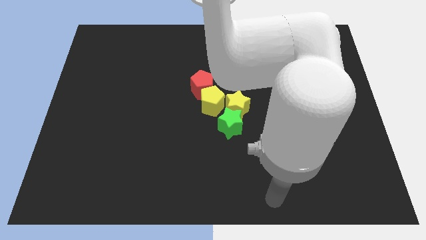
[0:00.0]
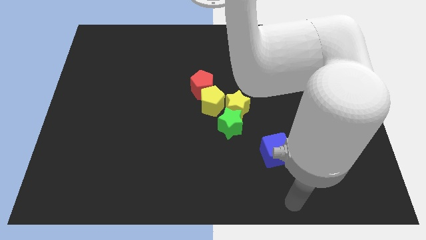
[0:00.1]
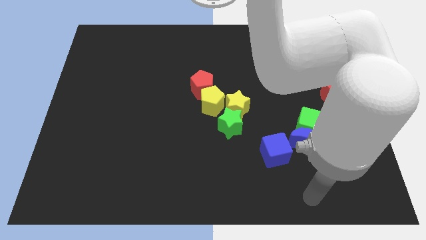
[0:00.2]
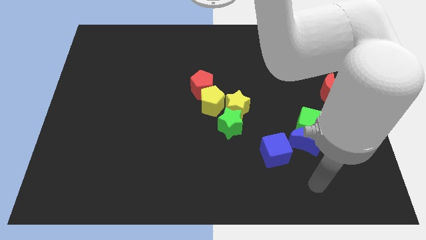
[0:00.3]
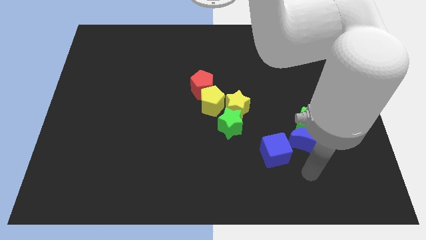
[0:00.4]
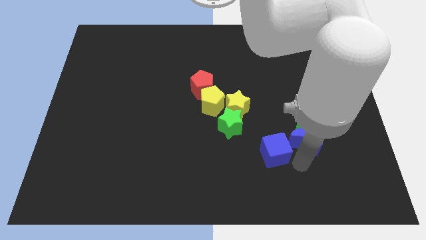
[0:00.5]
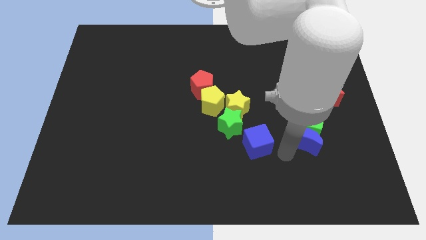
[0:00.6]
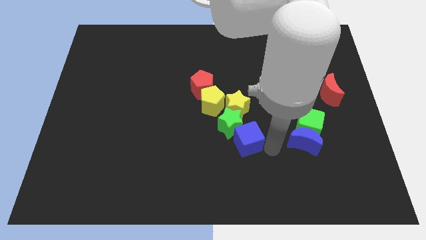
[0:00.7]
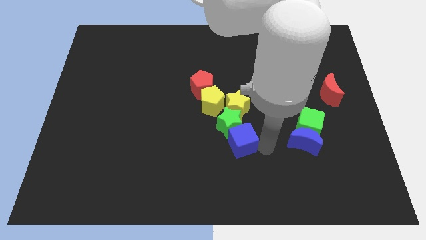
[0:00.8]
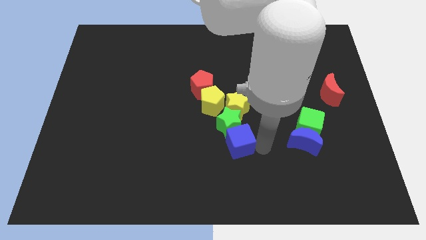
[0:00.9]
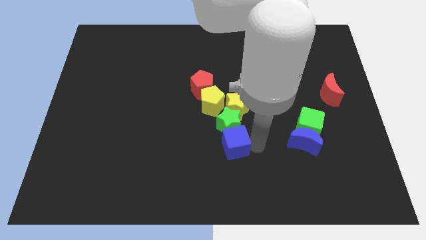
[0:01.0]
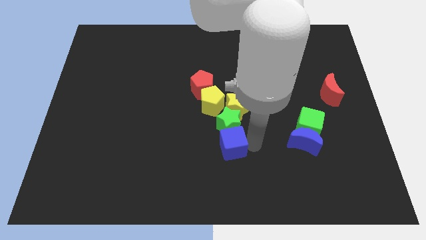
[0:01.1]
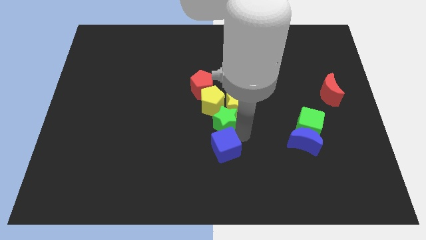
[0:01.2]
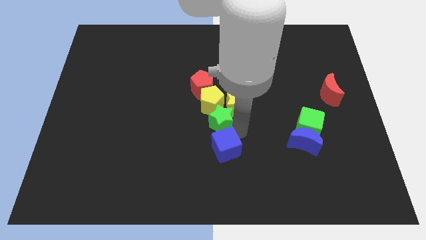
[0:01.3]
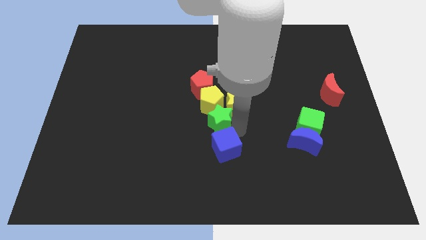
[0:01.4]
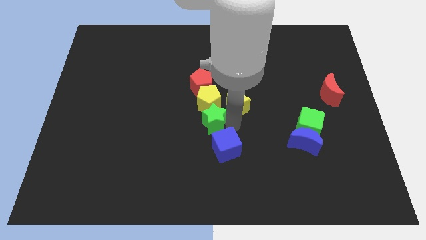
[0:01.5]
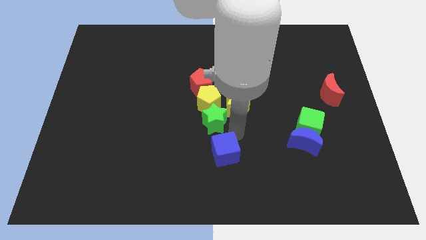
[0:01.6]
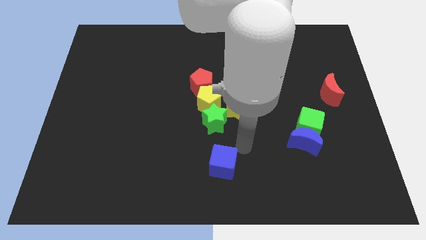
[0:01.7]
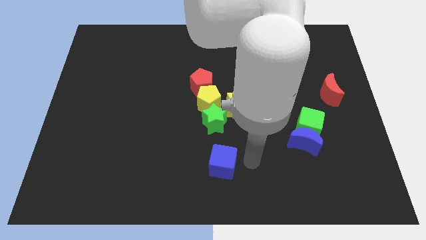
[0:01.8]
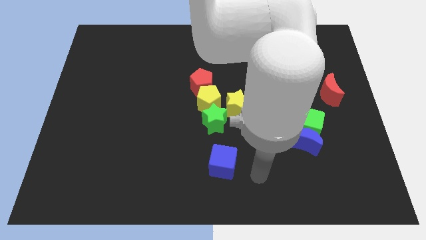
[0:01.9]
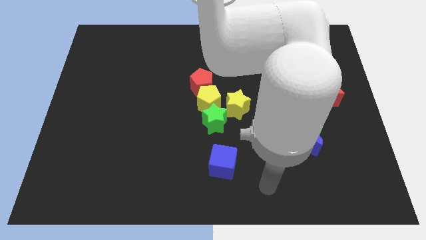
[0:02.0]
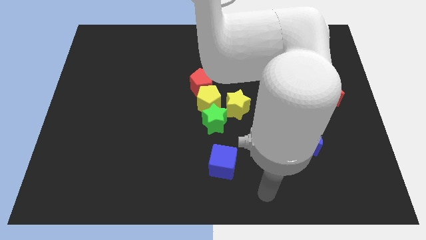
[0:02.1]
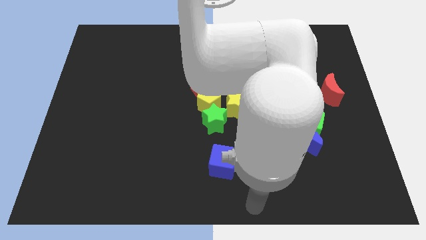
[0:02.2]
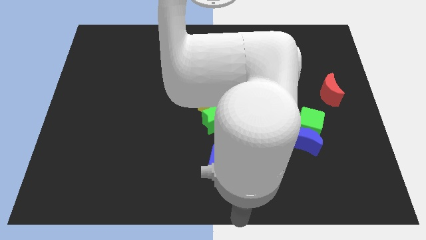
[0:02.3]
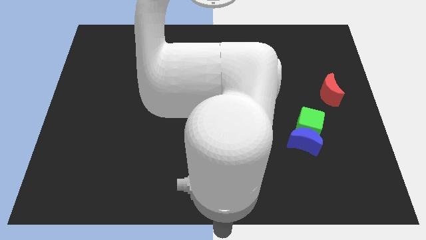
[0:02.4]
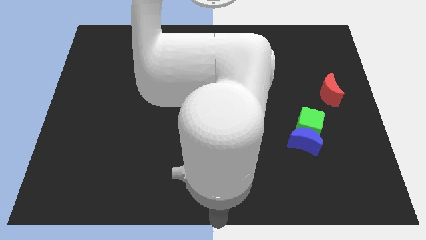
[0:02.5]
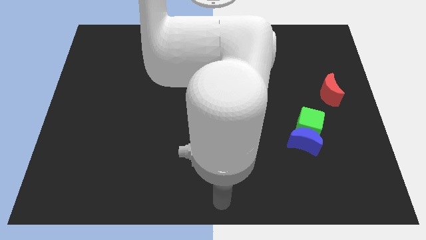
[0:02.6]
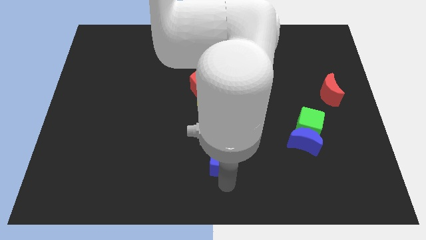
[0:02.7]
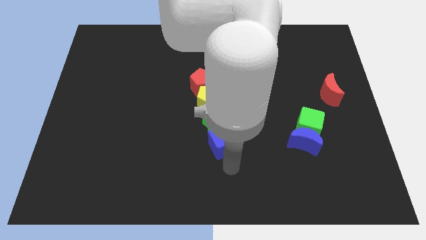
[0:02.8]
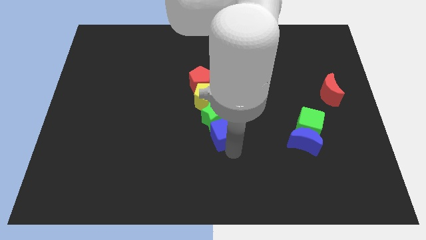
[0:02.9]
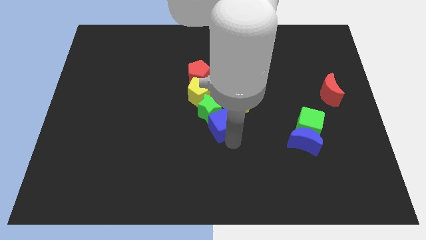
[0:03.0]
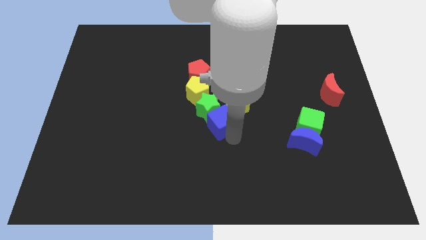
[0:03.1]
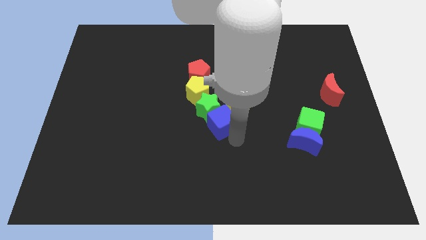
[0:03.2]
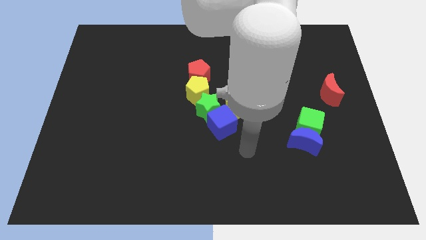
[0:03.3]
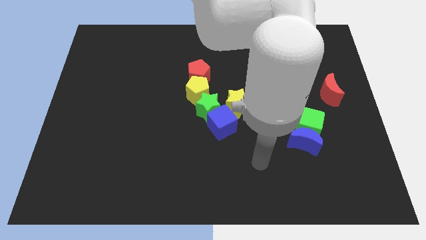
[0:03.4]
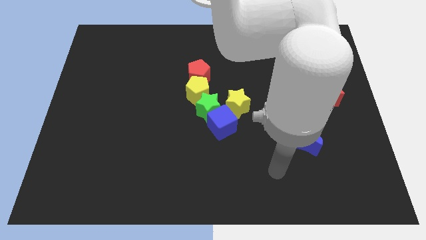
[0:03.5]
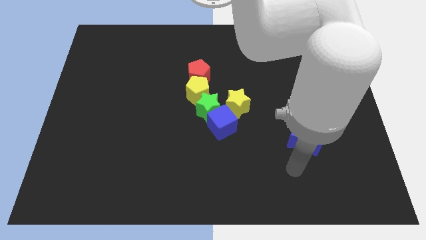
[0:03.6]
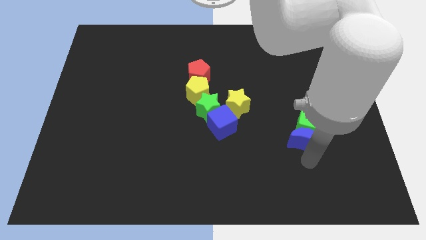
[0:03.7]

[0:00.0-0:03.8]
drag the blue moon to bottom right of green star

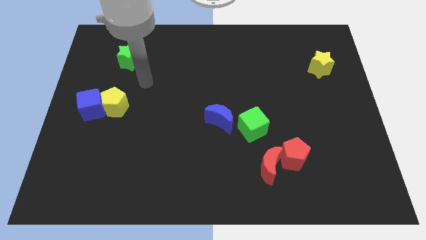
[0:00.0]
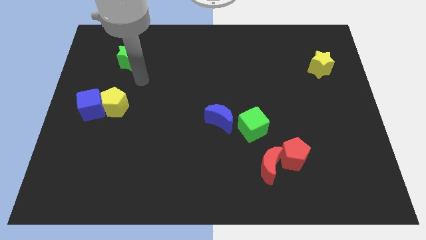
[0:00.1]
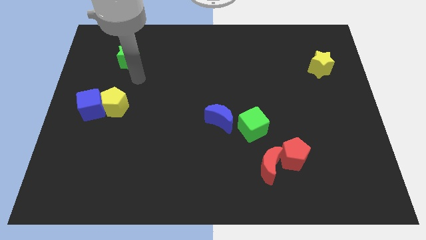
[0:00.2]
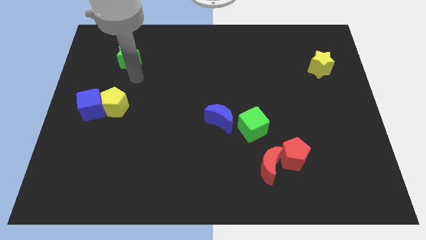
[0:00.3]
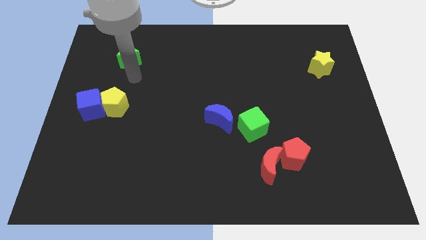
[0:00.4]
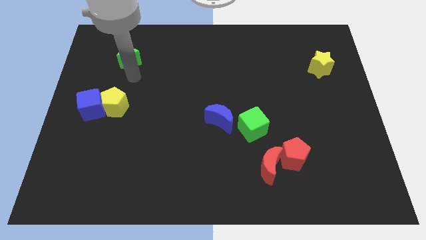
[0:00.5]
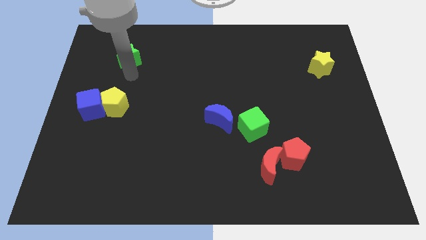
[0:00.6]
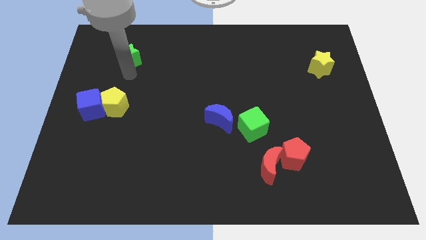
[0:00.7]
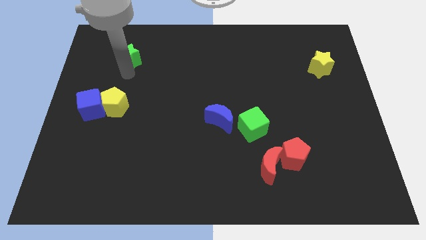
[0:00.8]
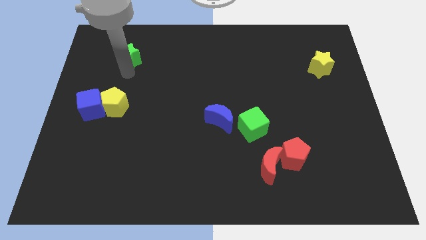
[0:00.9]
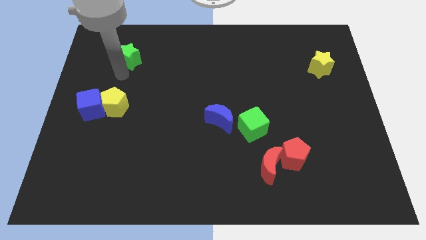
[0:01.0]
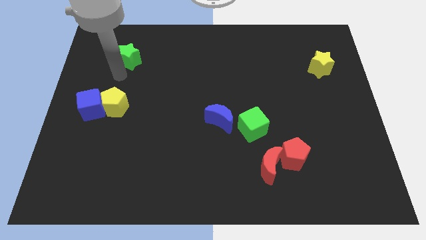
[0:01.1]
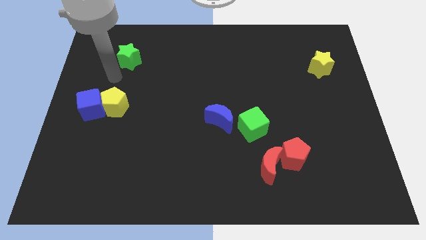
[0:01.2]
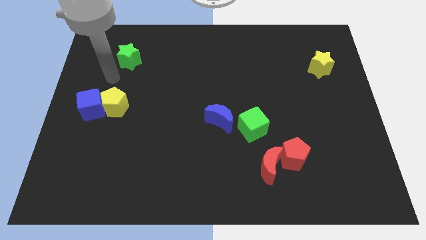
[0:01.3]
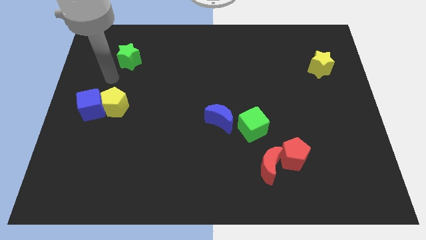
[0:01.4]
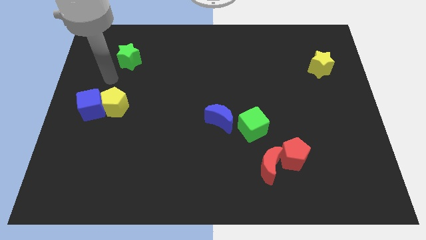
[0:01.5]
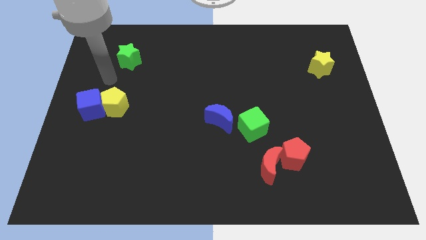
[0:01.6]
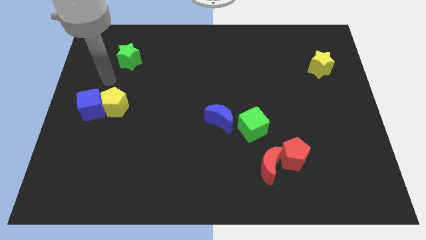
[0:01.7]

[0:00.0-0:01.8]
tap at the bottom side of the green star

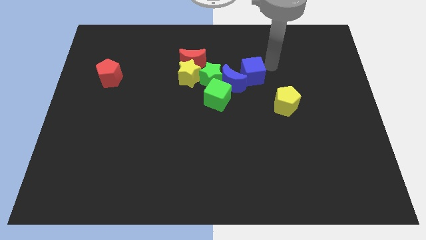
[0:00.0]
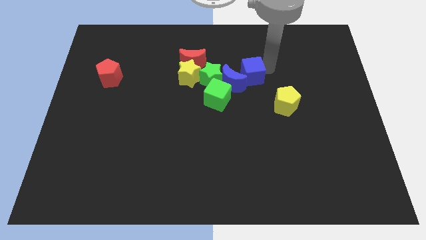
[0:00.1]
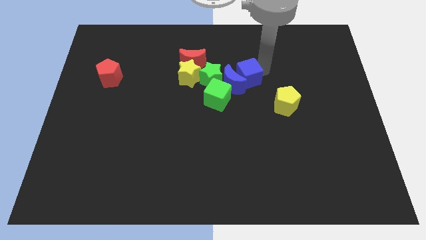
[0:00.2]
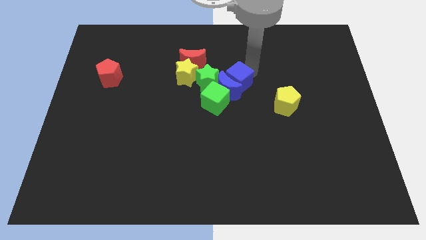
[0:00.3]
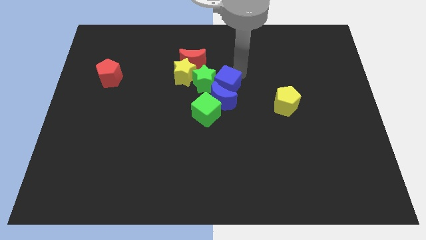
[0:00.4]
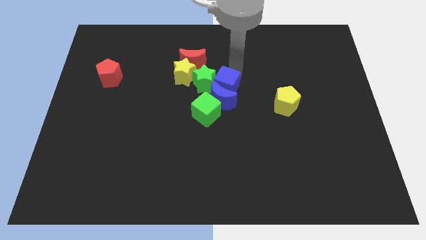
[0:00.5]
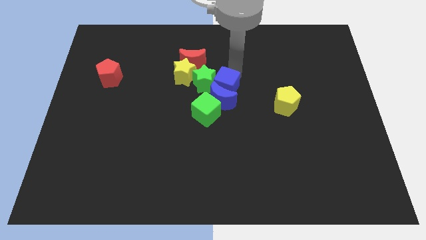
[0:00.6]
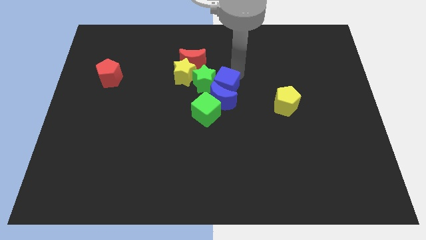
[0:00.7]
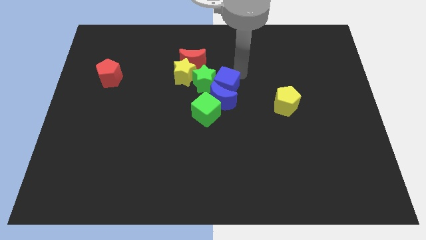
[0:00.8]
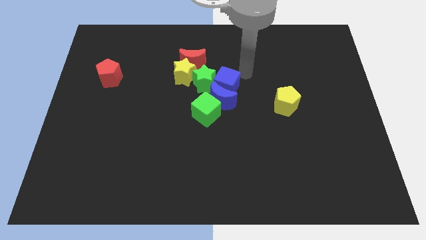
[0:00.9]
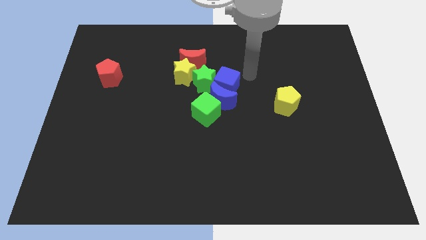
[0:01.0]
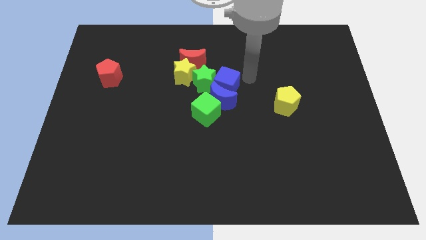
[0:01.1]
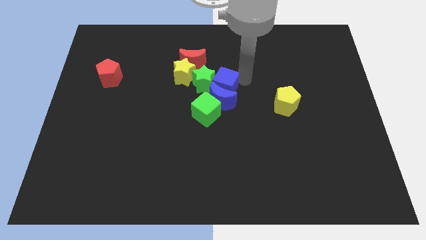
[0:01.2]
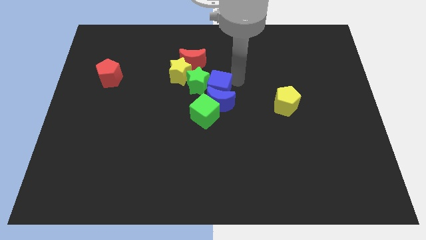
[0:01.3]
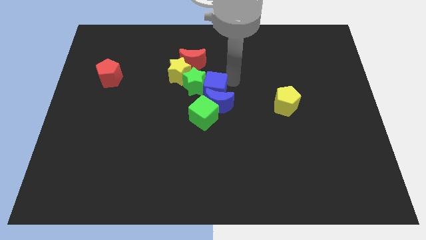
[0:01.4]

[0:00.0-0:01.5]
push the blue cube to the center

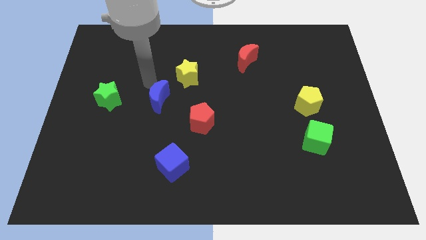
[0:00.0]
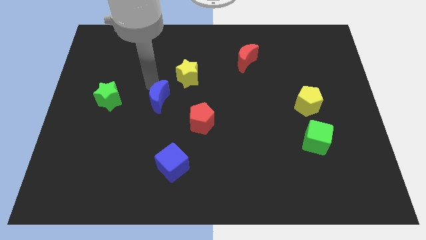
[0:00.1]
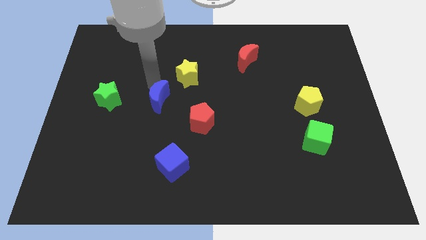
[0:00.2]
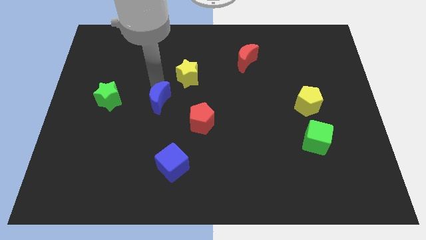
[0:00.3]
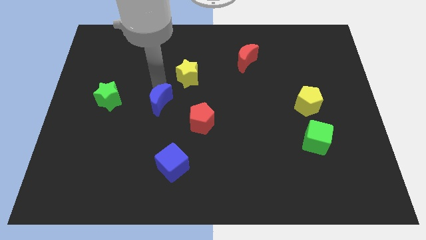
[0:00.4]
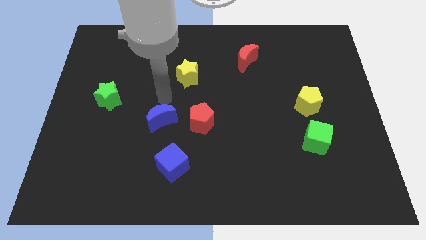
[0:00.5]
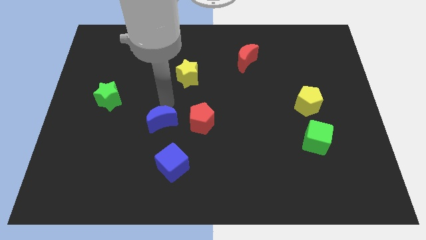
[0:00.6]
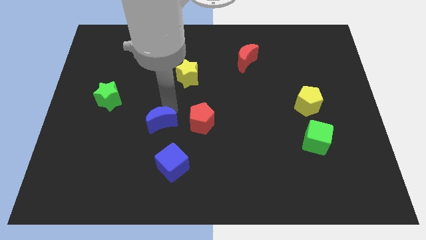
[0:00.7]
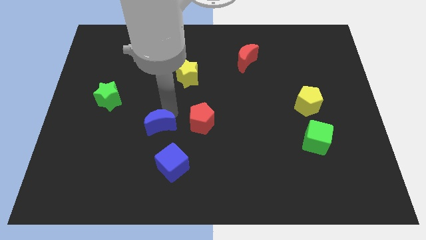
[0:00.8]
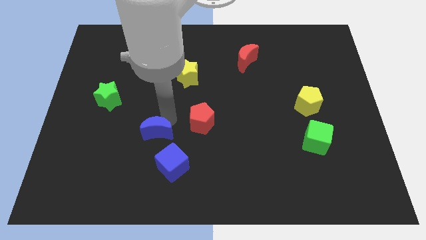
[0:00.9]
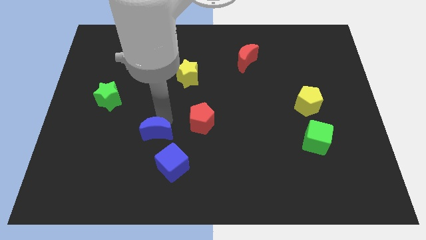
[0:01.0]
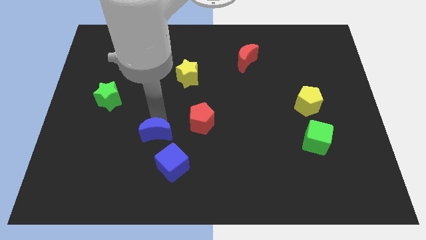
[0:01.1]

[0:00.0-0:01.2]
push the blue crescent downwards of the board

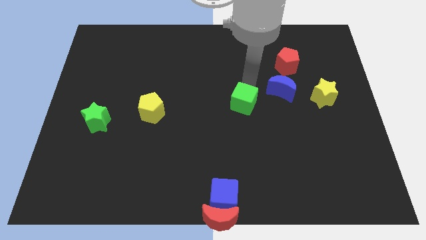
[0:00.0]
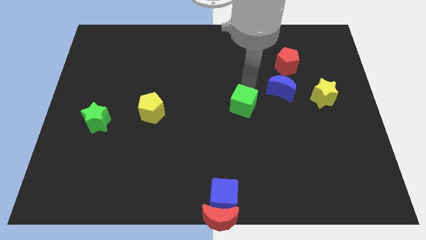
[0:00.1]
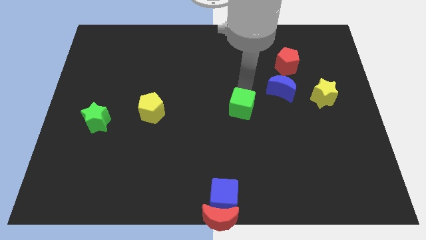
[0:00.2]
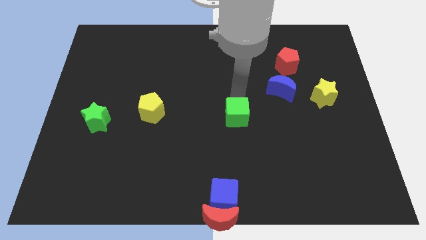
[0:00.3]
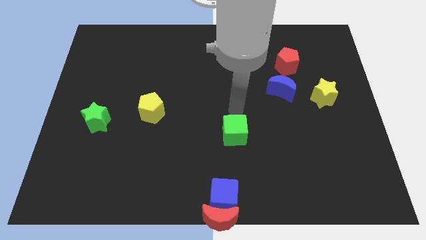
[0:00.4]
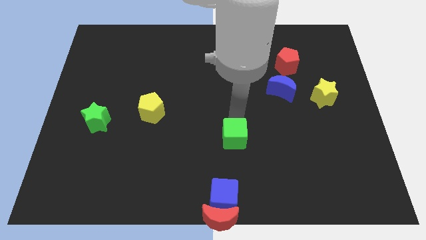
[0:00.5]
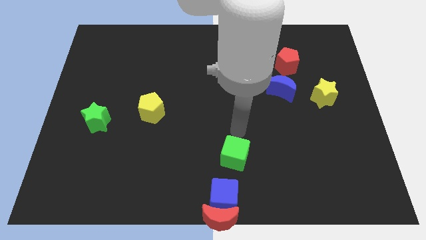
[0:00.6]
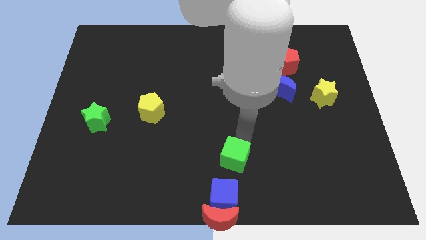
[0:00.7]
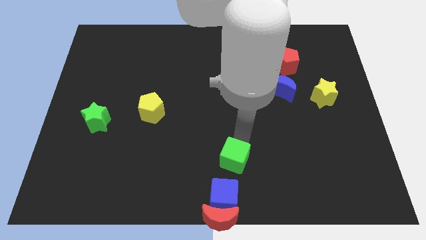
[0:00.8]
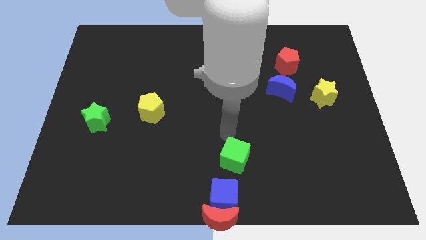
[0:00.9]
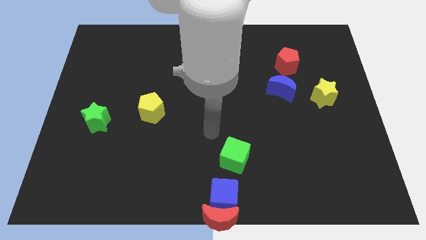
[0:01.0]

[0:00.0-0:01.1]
push the green cube towards blue cube
